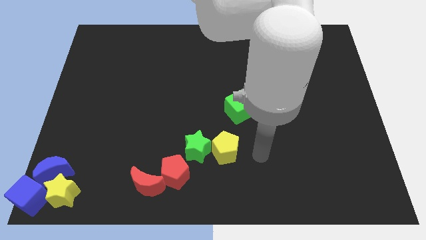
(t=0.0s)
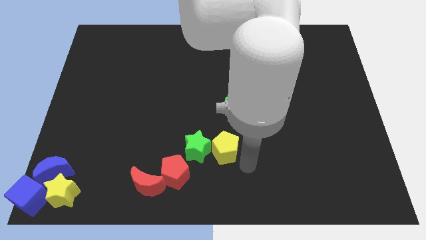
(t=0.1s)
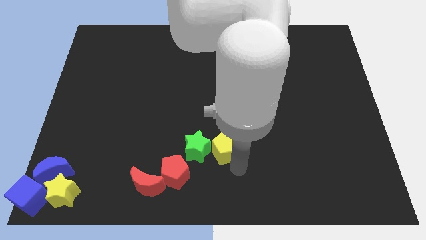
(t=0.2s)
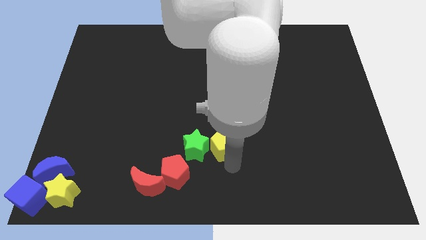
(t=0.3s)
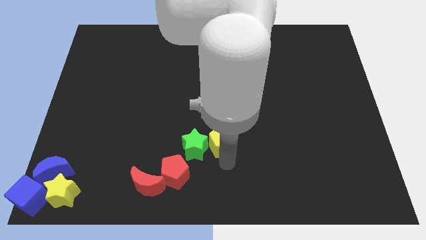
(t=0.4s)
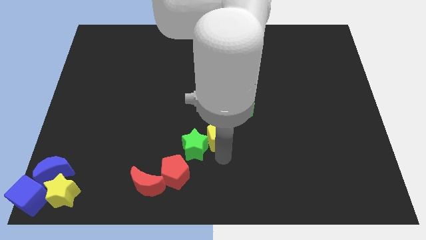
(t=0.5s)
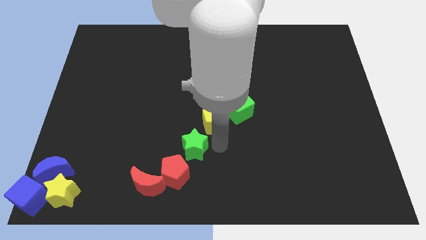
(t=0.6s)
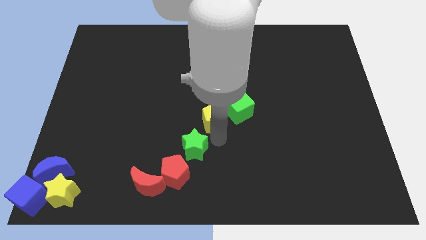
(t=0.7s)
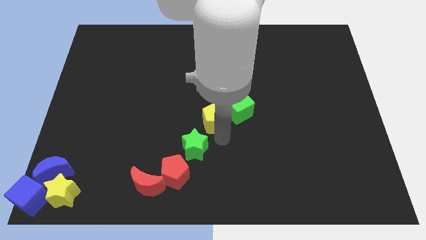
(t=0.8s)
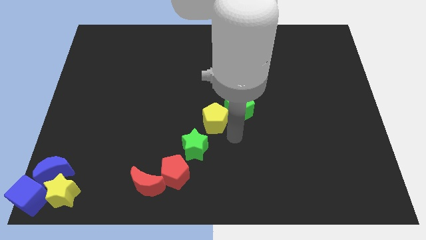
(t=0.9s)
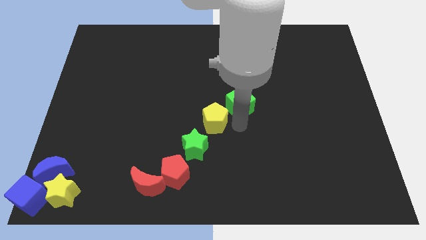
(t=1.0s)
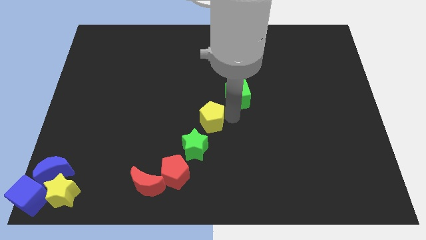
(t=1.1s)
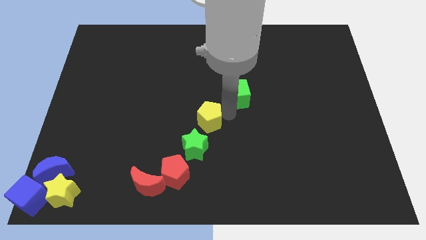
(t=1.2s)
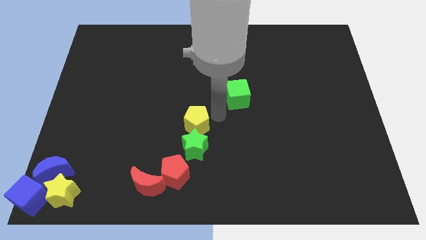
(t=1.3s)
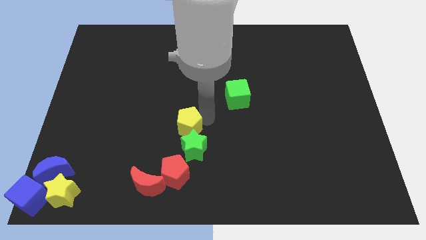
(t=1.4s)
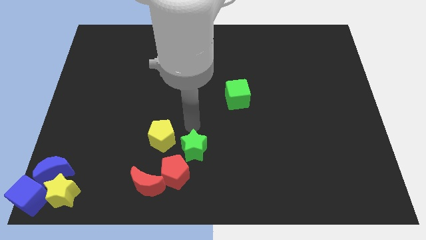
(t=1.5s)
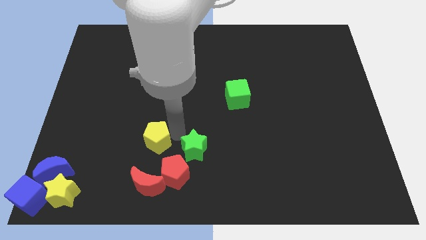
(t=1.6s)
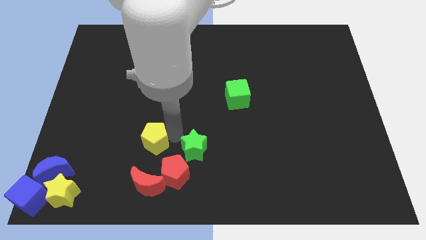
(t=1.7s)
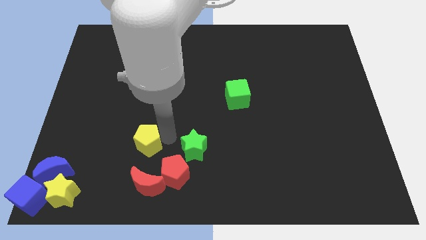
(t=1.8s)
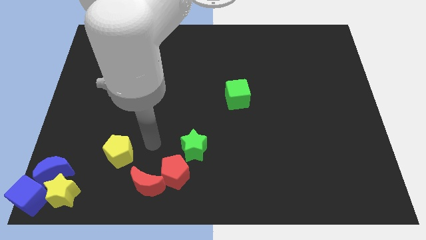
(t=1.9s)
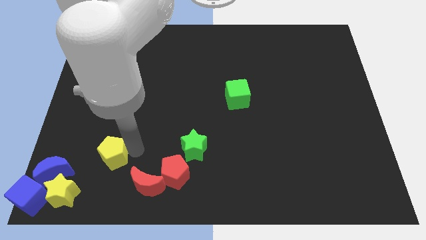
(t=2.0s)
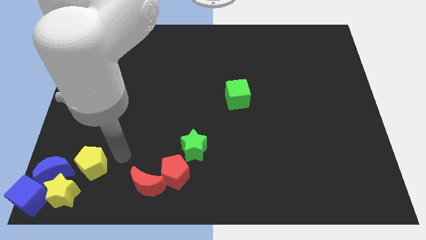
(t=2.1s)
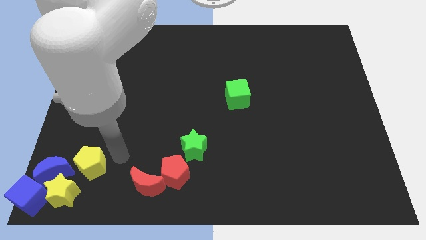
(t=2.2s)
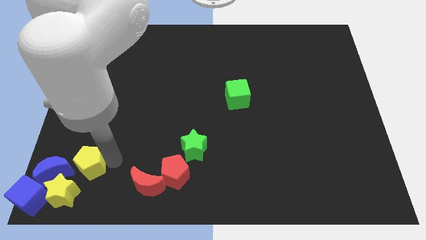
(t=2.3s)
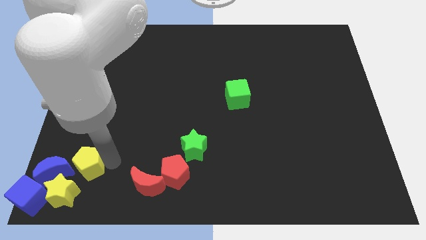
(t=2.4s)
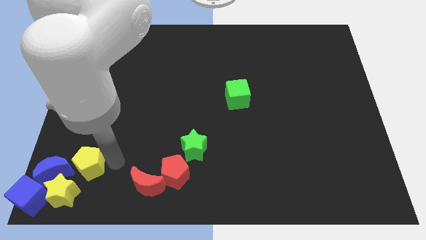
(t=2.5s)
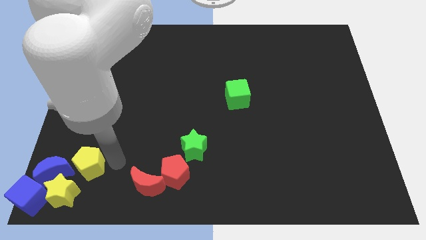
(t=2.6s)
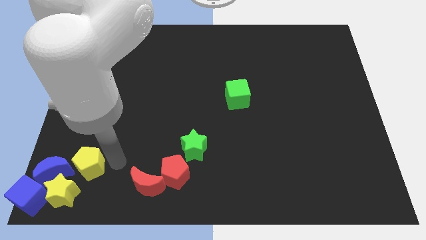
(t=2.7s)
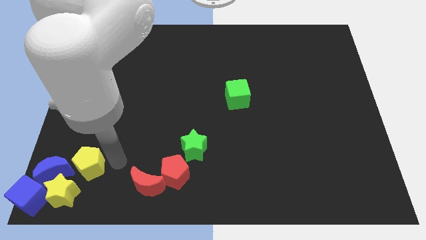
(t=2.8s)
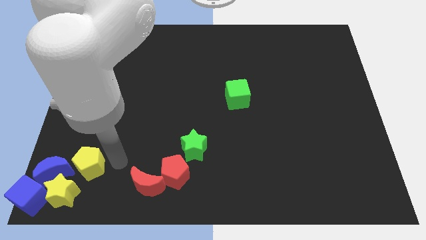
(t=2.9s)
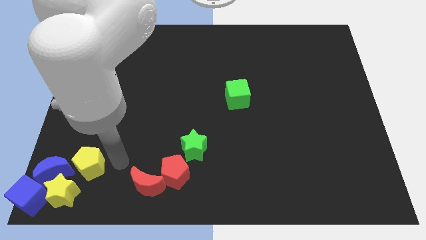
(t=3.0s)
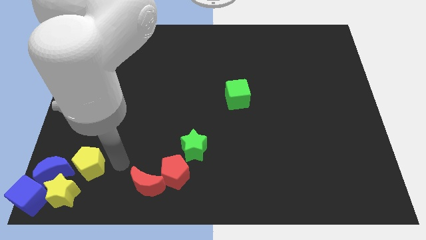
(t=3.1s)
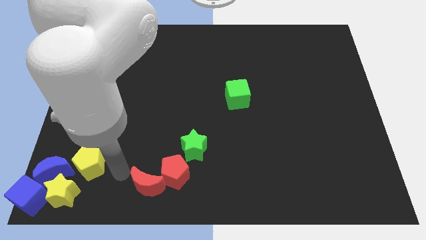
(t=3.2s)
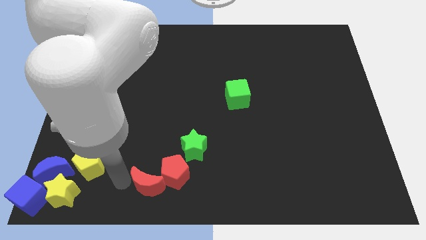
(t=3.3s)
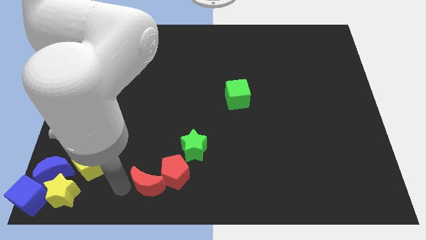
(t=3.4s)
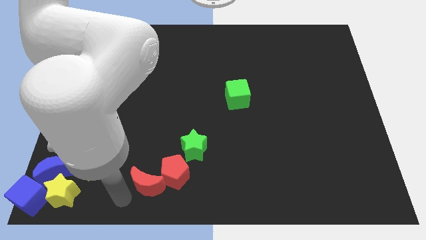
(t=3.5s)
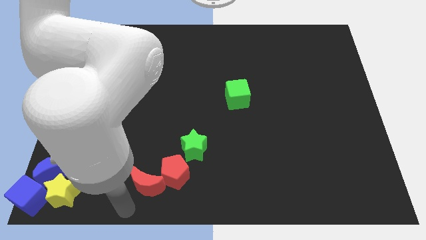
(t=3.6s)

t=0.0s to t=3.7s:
push the yellow pentagon to the right of the blue crescent

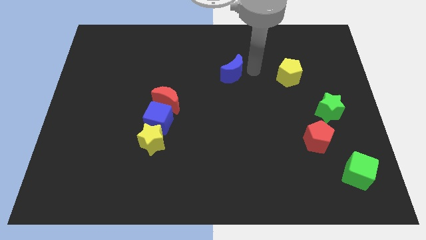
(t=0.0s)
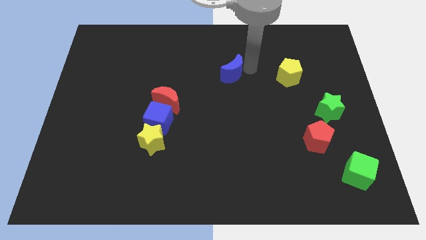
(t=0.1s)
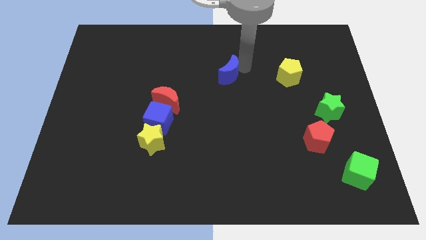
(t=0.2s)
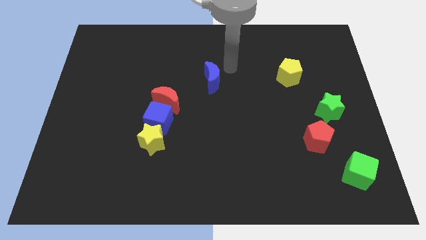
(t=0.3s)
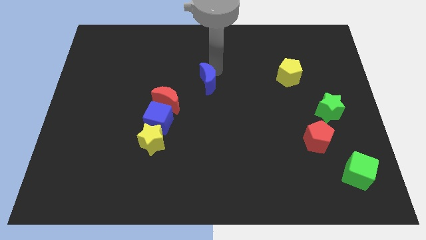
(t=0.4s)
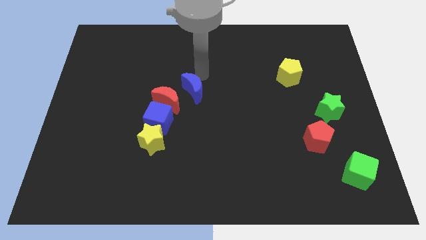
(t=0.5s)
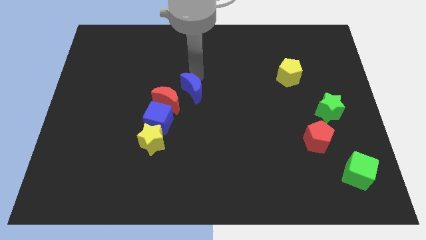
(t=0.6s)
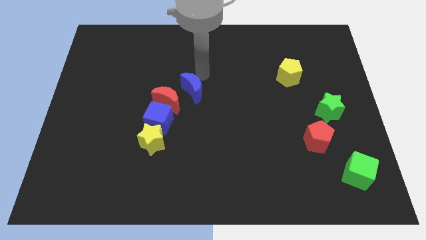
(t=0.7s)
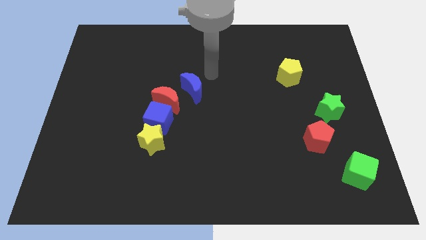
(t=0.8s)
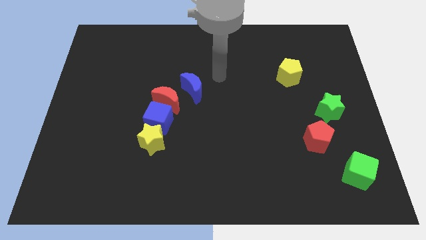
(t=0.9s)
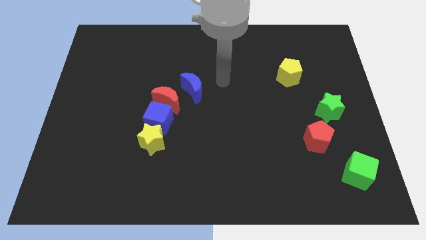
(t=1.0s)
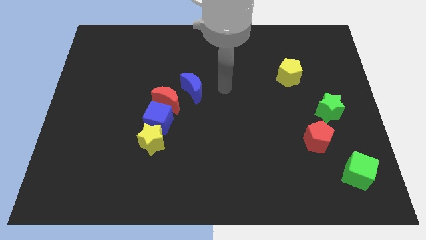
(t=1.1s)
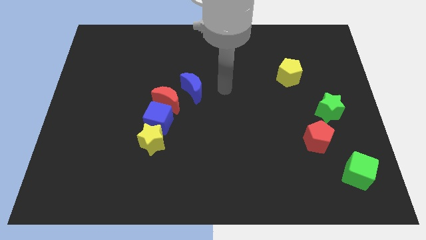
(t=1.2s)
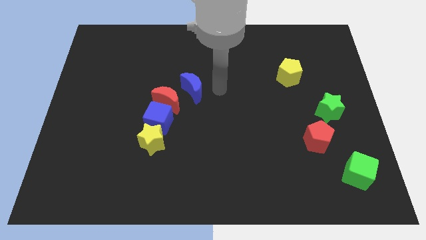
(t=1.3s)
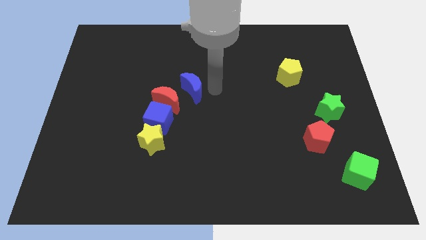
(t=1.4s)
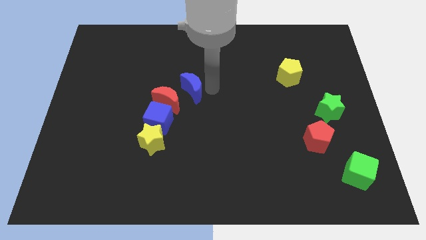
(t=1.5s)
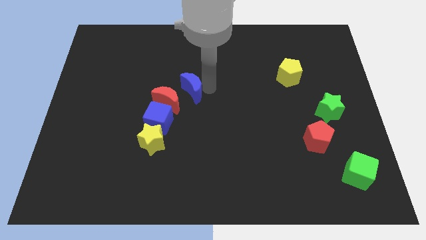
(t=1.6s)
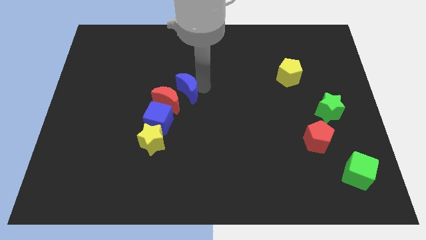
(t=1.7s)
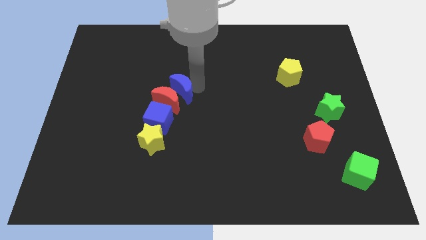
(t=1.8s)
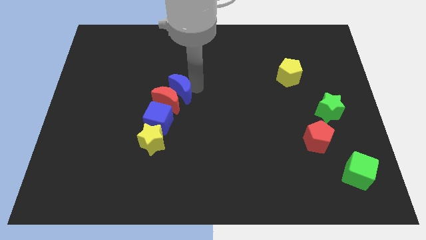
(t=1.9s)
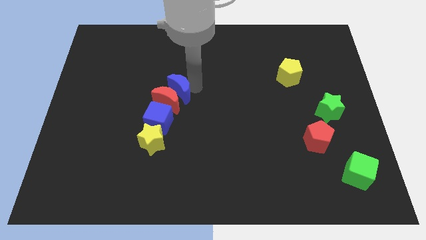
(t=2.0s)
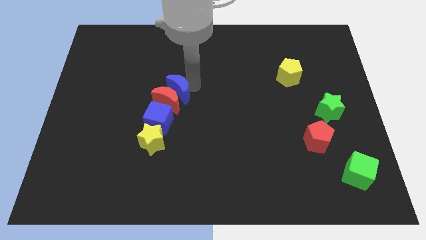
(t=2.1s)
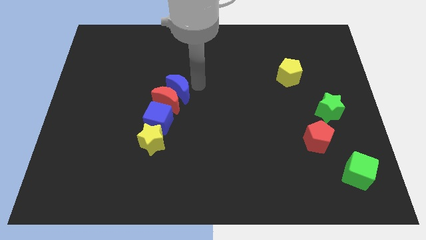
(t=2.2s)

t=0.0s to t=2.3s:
push the blue crescent to the top of the red crescent

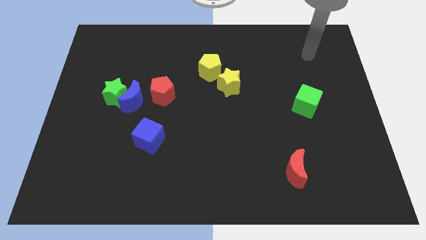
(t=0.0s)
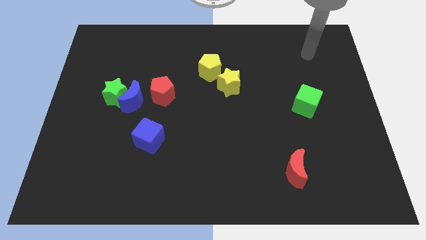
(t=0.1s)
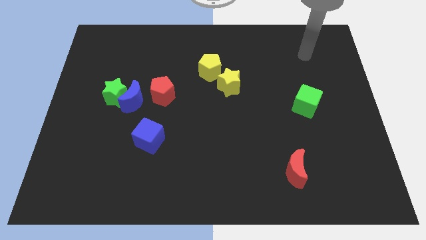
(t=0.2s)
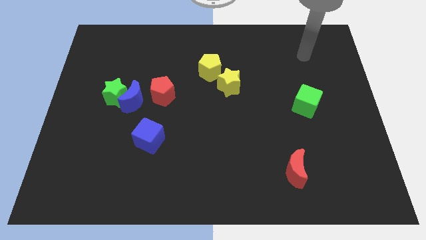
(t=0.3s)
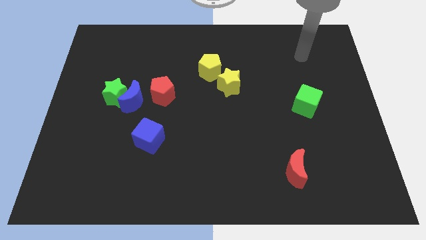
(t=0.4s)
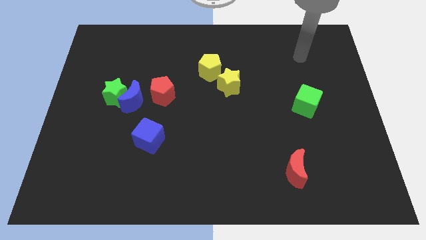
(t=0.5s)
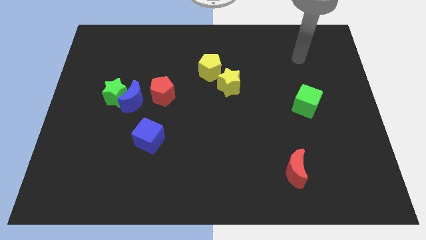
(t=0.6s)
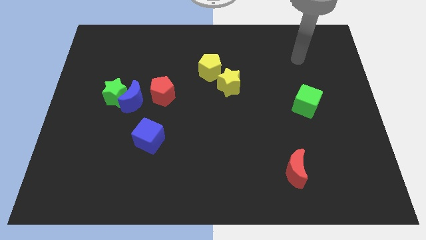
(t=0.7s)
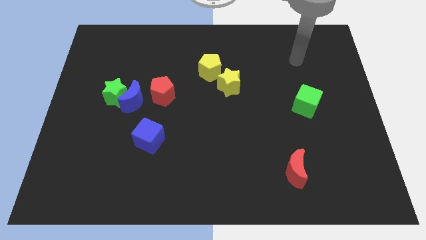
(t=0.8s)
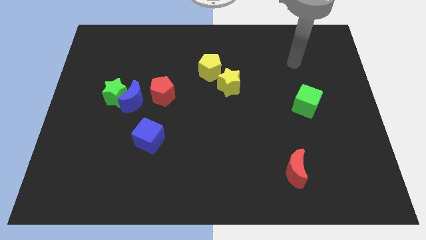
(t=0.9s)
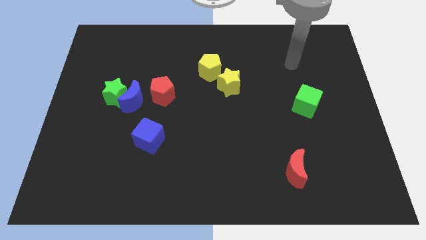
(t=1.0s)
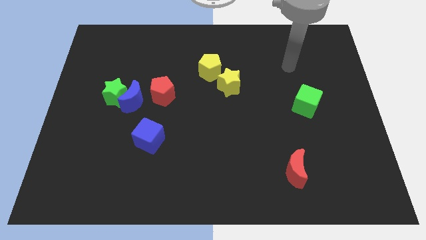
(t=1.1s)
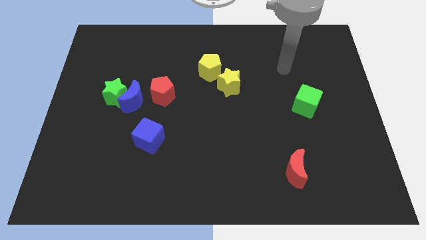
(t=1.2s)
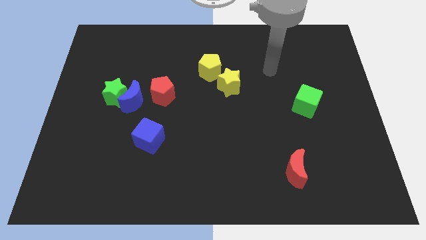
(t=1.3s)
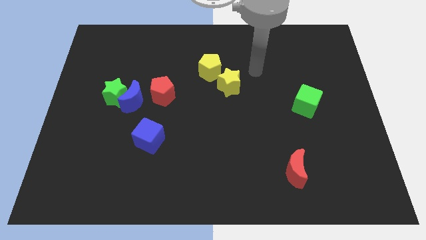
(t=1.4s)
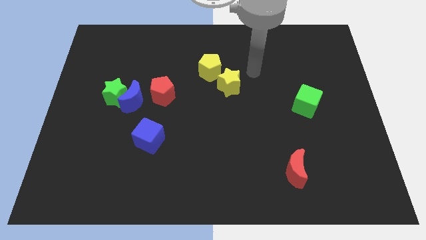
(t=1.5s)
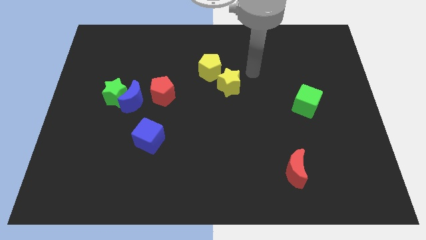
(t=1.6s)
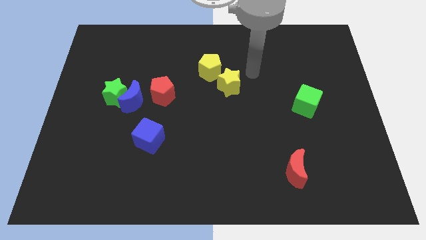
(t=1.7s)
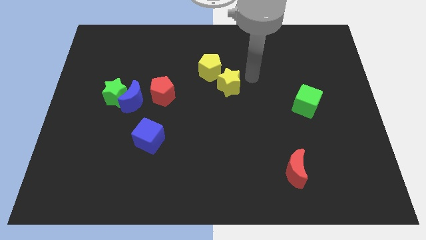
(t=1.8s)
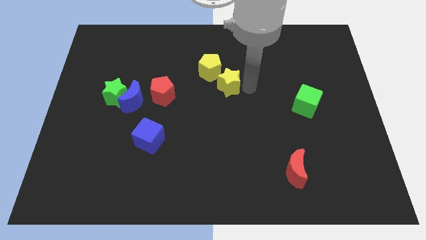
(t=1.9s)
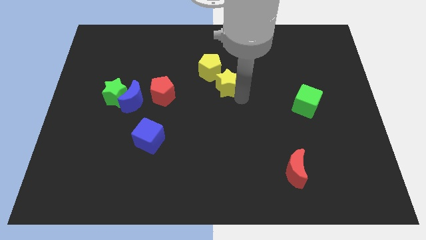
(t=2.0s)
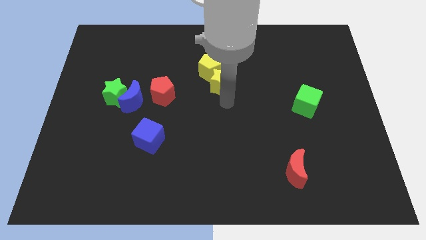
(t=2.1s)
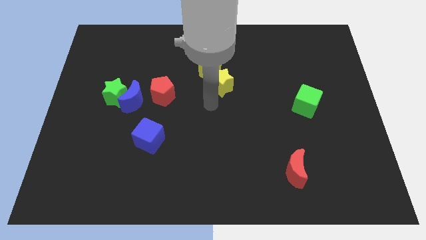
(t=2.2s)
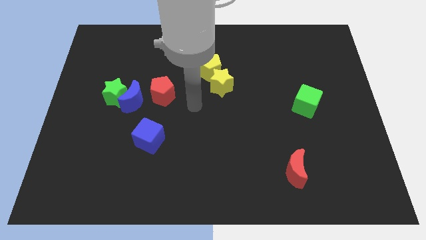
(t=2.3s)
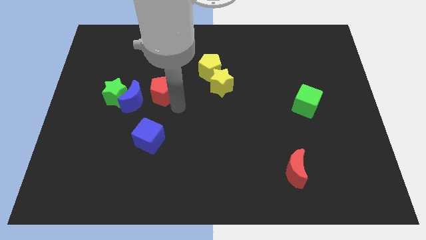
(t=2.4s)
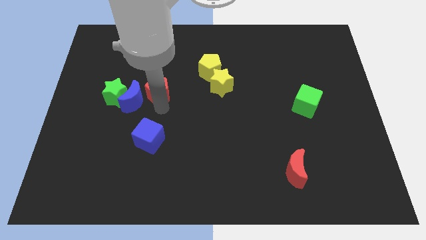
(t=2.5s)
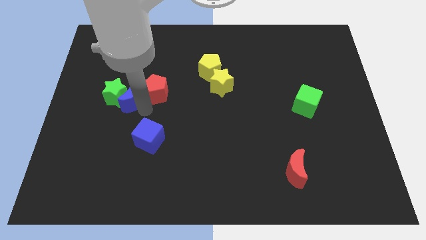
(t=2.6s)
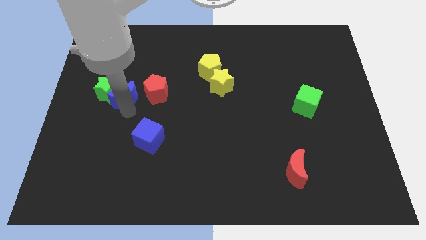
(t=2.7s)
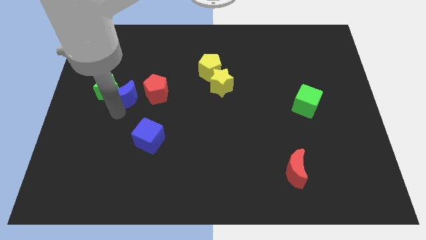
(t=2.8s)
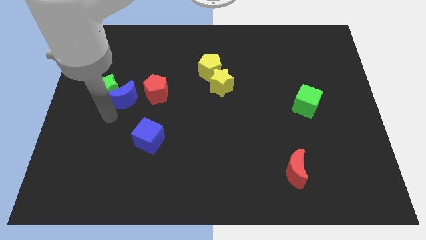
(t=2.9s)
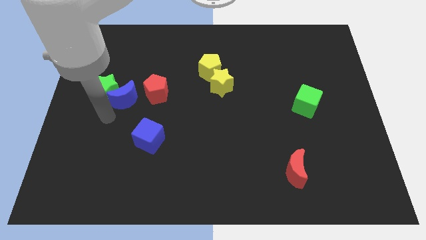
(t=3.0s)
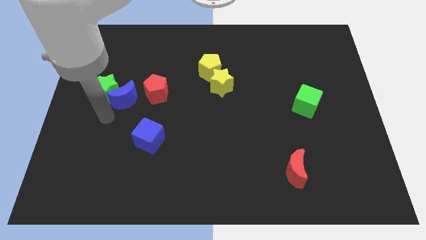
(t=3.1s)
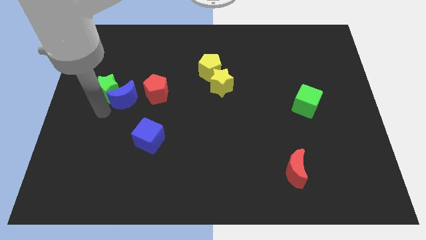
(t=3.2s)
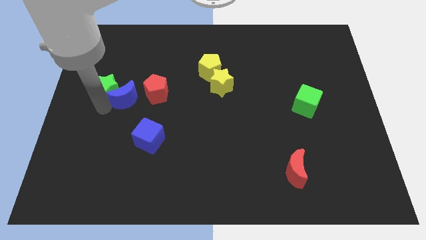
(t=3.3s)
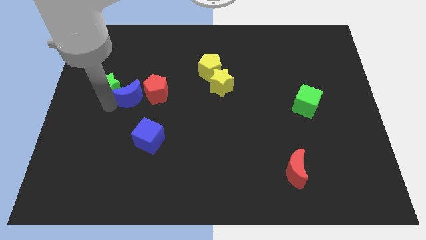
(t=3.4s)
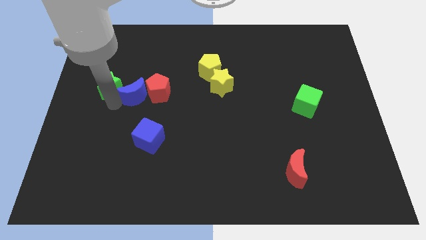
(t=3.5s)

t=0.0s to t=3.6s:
push the blue crescent into the red pentagon
